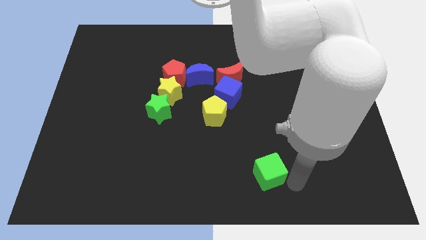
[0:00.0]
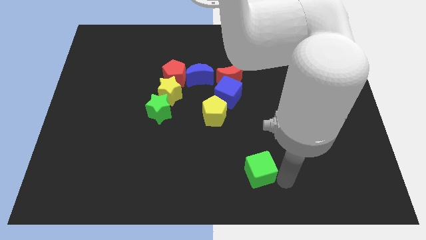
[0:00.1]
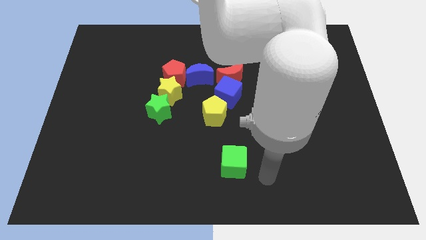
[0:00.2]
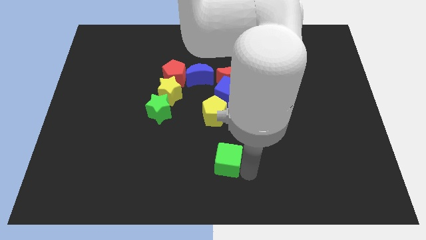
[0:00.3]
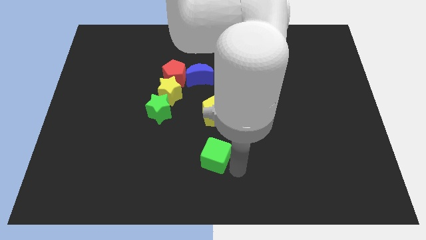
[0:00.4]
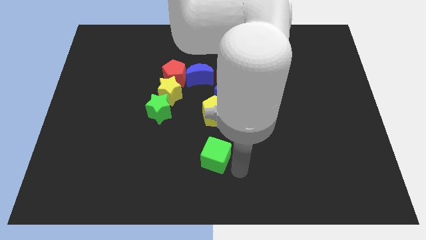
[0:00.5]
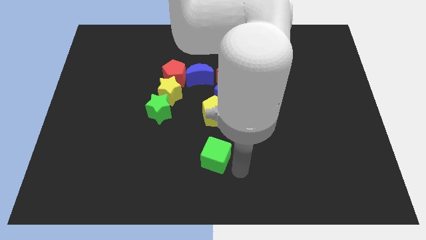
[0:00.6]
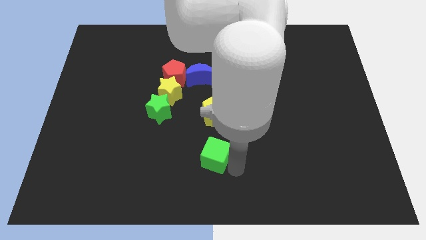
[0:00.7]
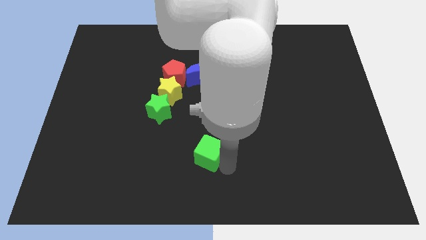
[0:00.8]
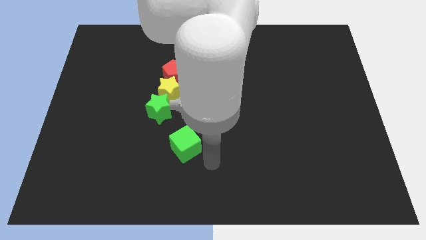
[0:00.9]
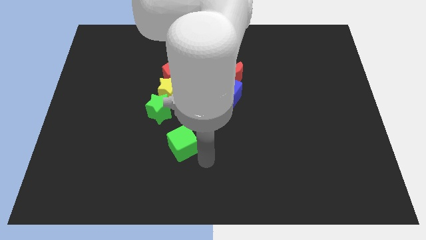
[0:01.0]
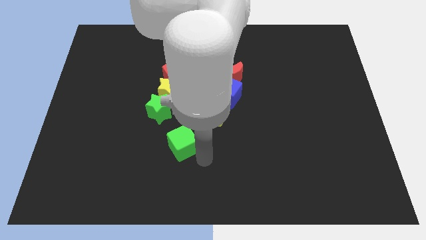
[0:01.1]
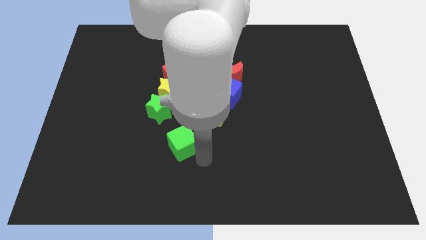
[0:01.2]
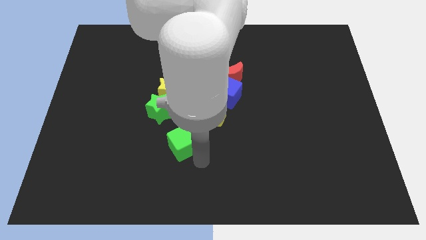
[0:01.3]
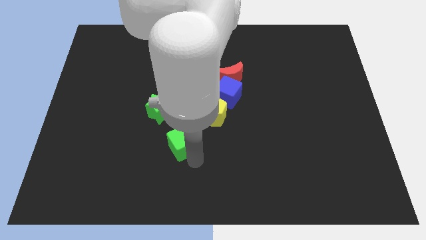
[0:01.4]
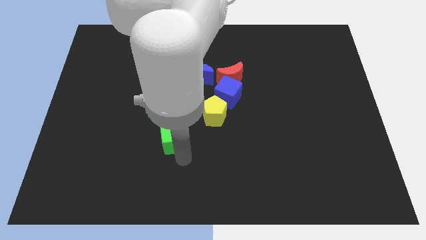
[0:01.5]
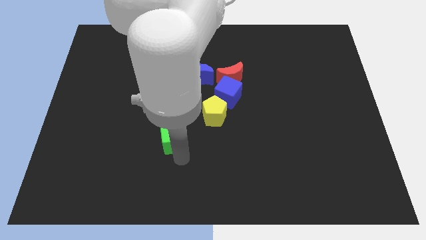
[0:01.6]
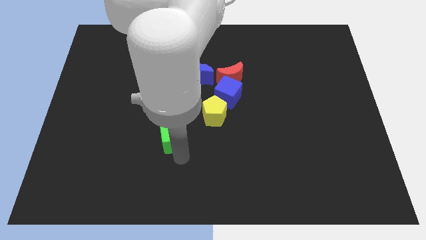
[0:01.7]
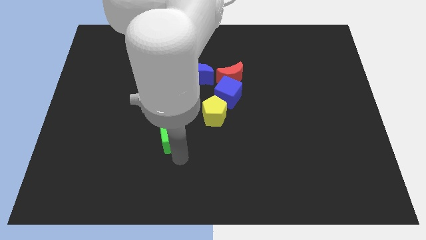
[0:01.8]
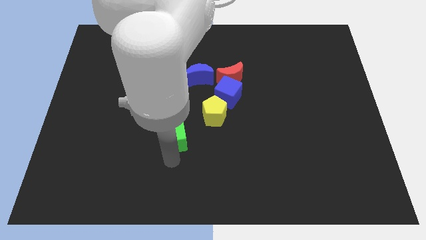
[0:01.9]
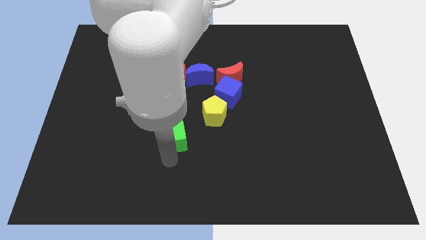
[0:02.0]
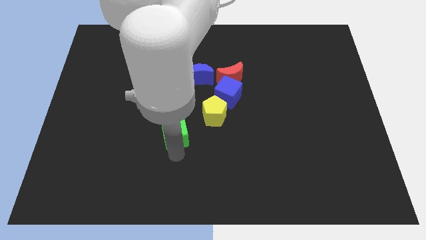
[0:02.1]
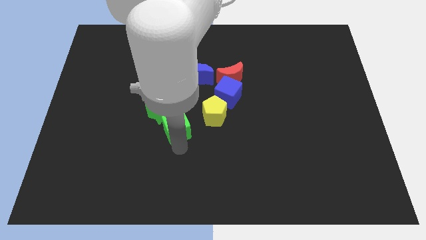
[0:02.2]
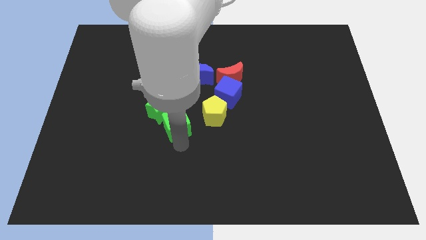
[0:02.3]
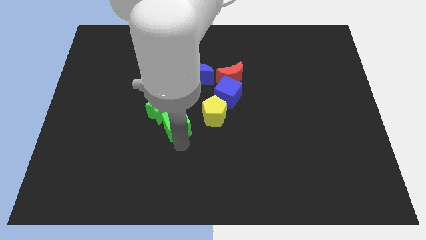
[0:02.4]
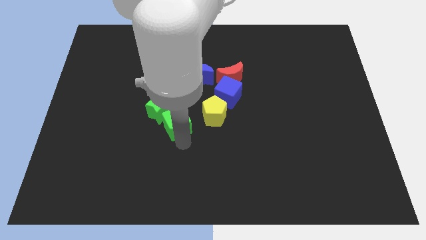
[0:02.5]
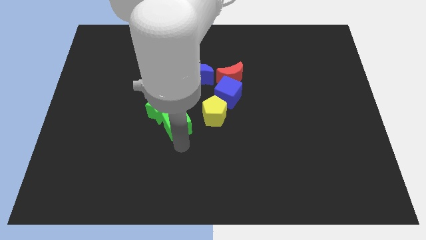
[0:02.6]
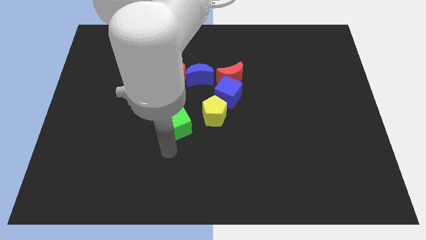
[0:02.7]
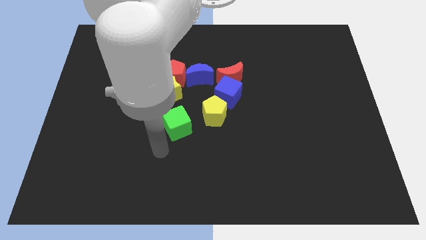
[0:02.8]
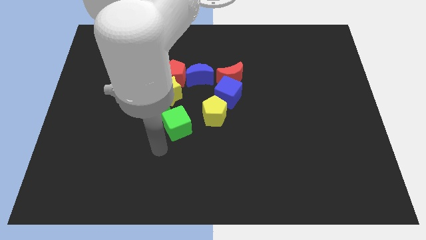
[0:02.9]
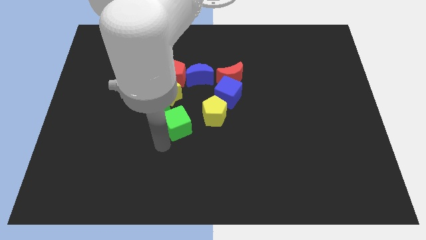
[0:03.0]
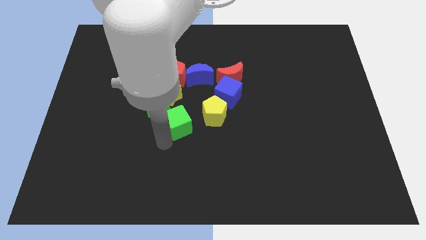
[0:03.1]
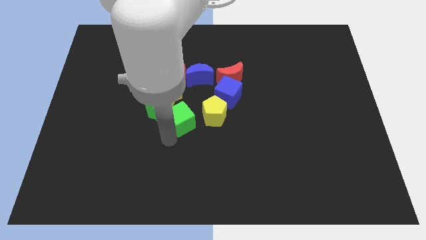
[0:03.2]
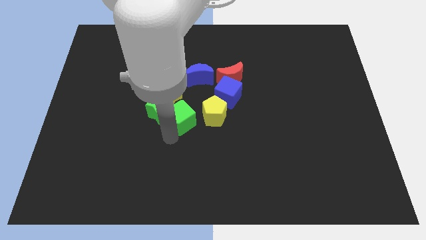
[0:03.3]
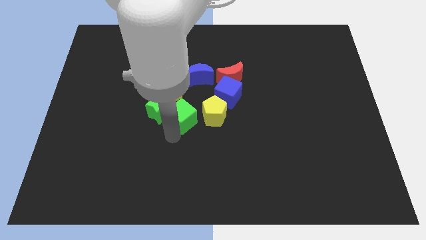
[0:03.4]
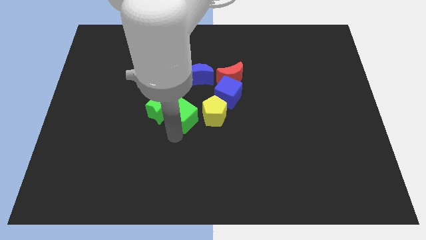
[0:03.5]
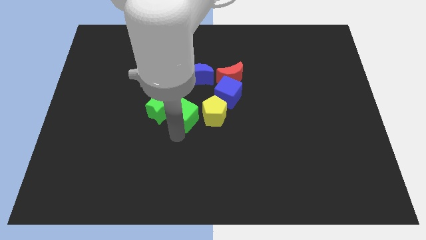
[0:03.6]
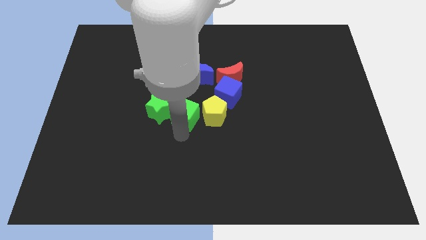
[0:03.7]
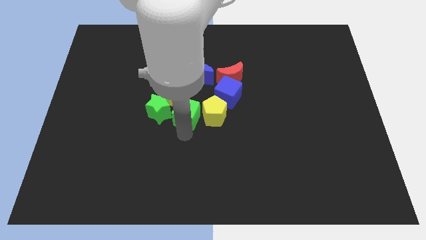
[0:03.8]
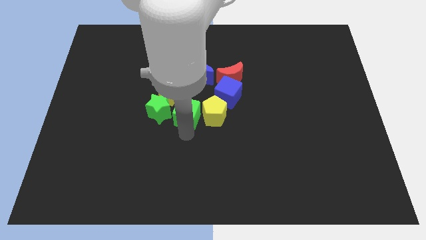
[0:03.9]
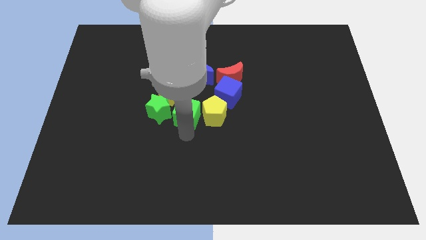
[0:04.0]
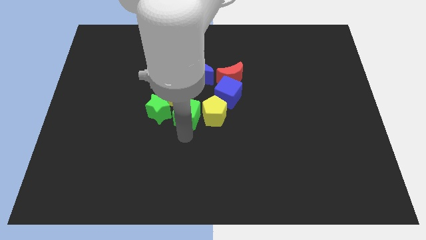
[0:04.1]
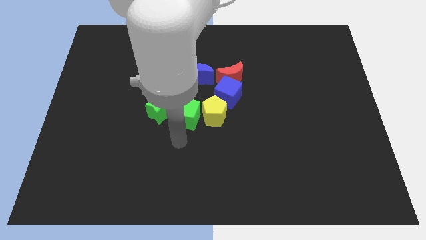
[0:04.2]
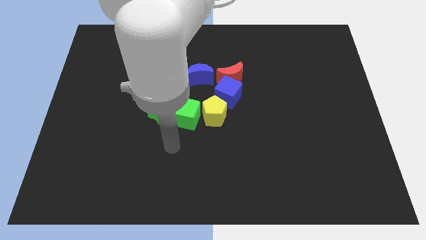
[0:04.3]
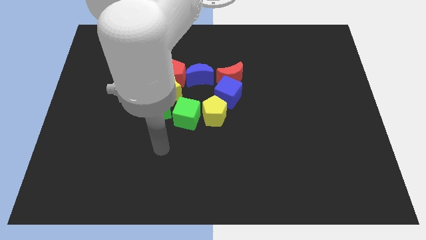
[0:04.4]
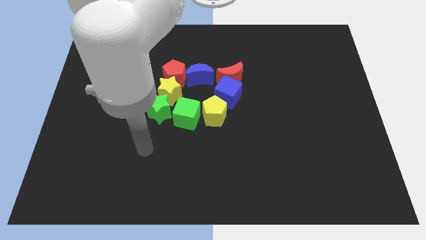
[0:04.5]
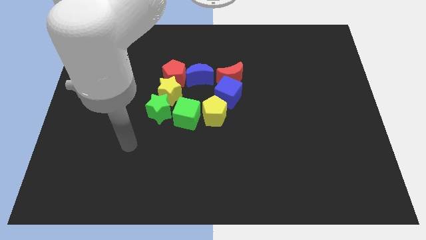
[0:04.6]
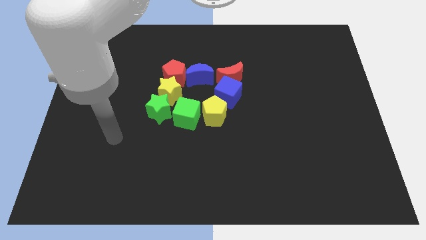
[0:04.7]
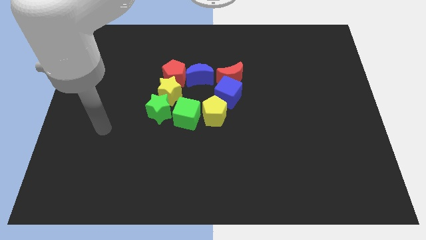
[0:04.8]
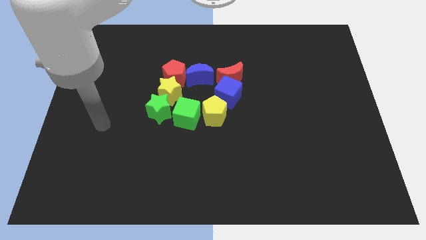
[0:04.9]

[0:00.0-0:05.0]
place the green cube in between the yellow pentagon and the green star

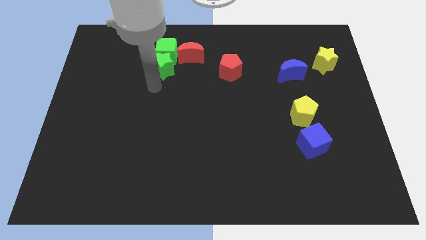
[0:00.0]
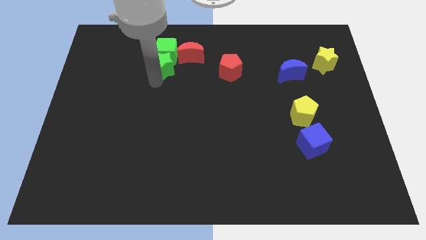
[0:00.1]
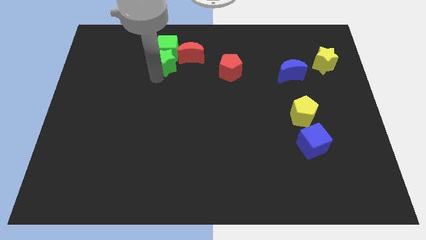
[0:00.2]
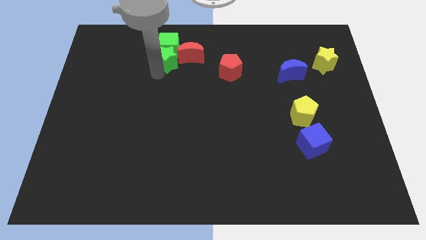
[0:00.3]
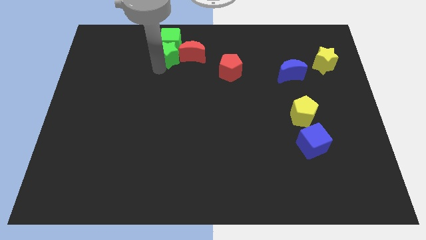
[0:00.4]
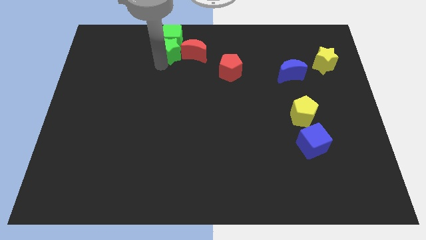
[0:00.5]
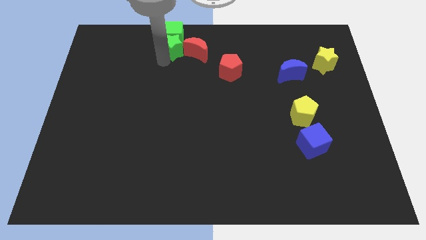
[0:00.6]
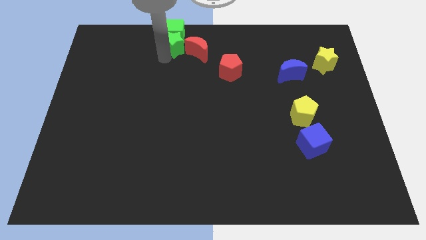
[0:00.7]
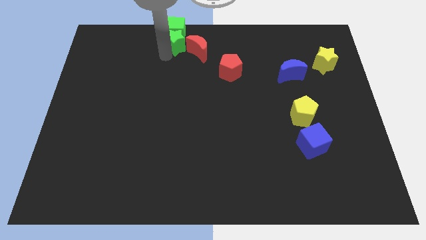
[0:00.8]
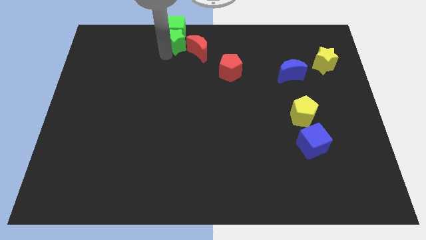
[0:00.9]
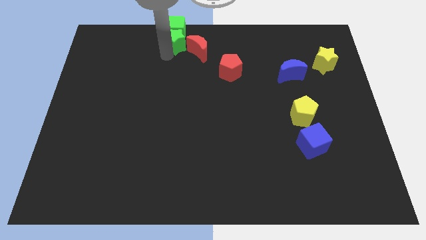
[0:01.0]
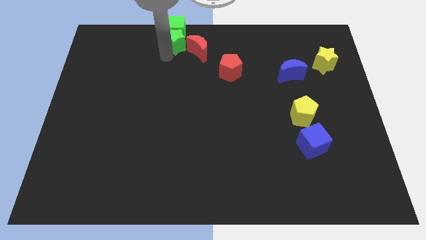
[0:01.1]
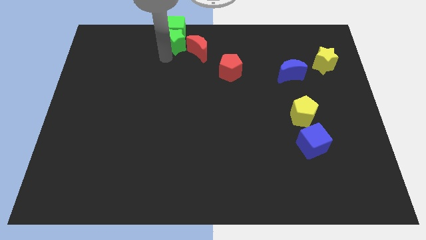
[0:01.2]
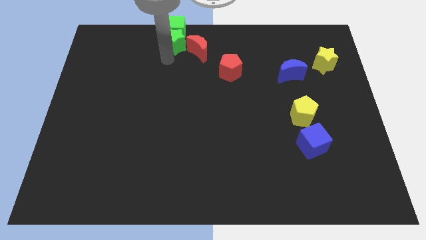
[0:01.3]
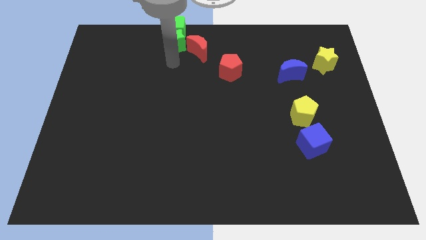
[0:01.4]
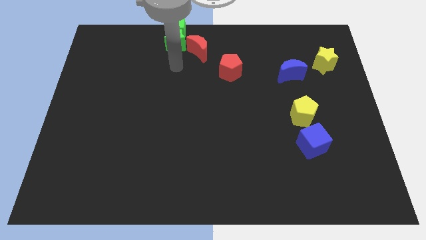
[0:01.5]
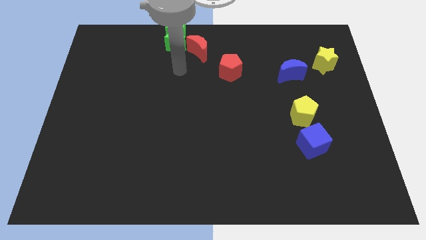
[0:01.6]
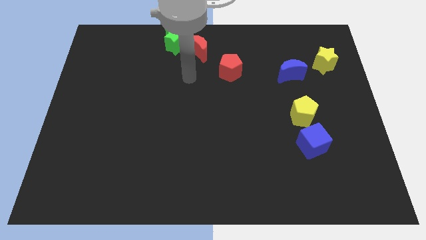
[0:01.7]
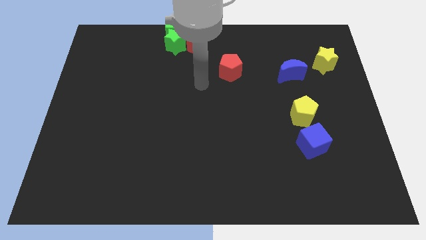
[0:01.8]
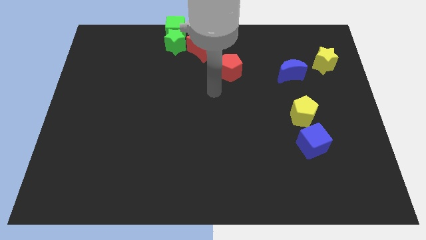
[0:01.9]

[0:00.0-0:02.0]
slide the green blocks to the top

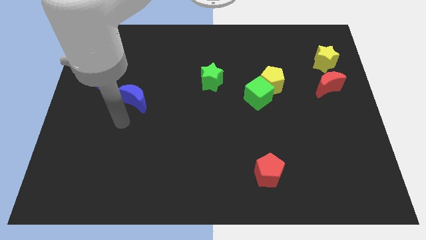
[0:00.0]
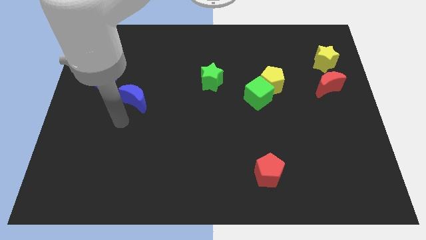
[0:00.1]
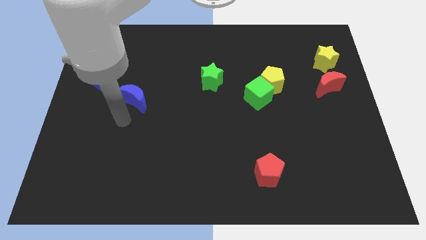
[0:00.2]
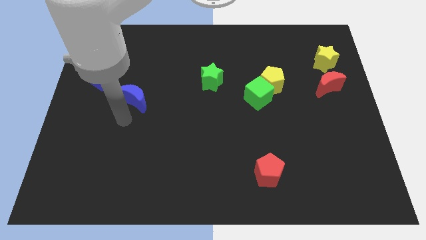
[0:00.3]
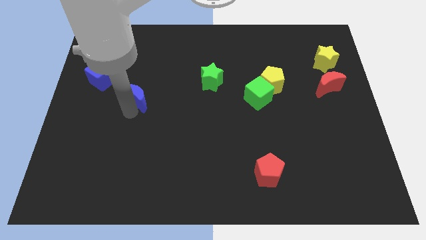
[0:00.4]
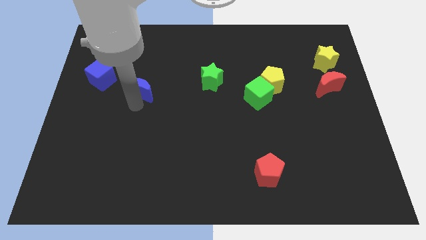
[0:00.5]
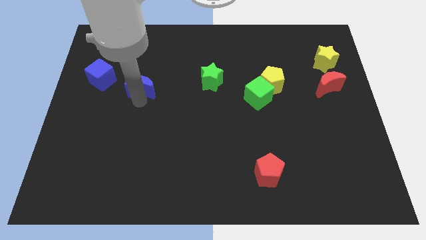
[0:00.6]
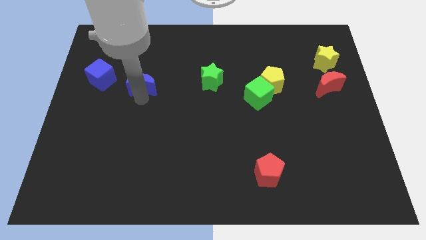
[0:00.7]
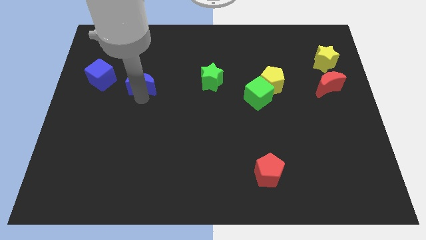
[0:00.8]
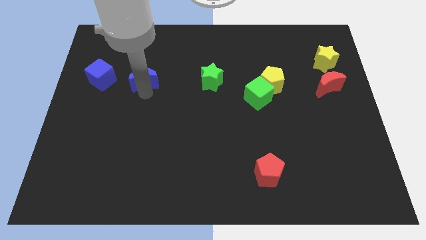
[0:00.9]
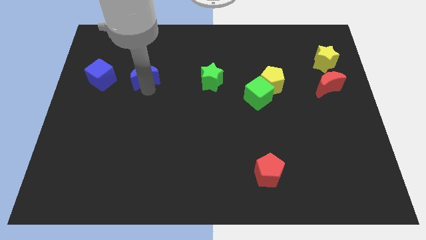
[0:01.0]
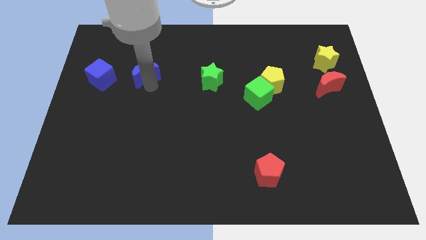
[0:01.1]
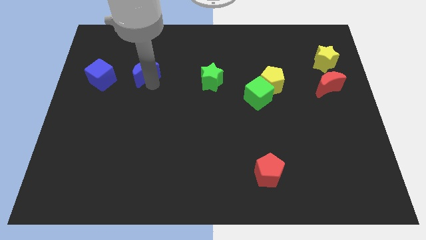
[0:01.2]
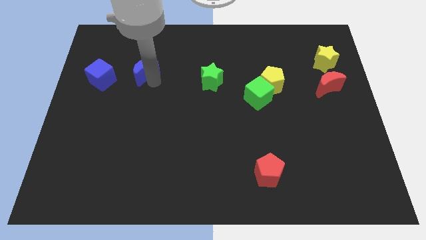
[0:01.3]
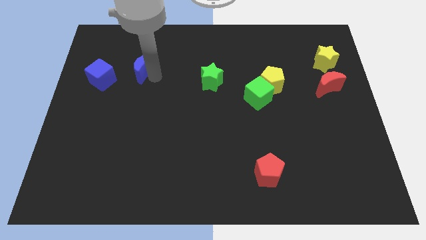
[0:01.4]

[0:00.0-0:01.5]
place the blue crescent in between the green star and blue cube

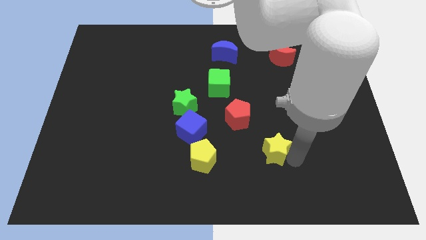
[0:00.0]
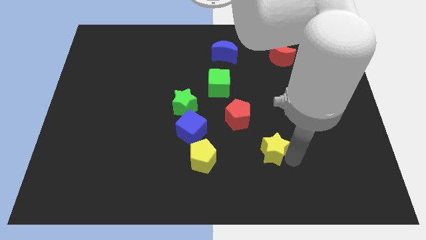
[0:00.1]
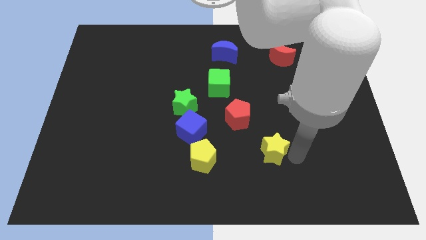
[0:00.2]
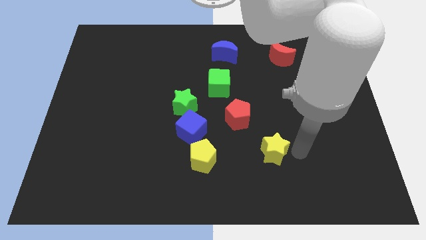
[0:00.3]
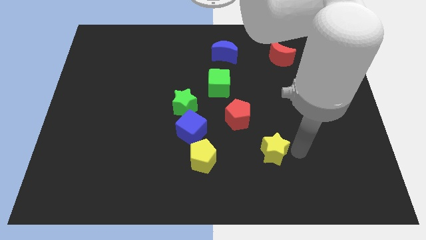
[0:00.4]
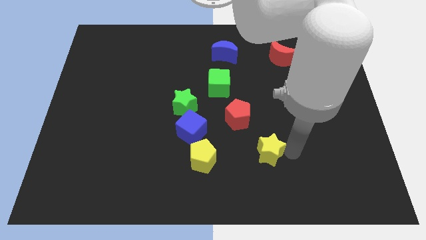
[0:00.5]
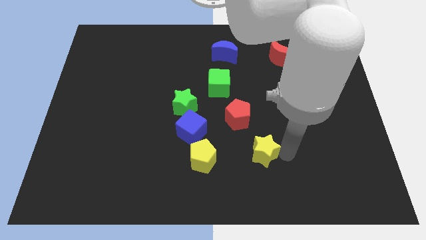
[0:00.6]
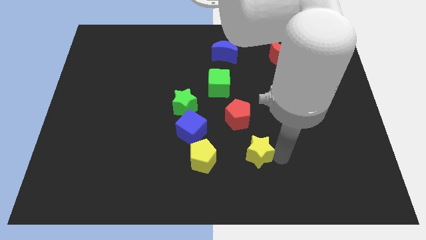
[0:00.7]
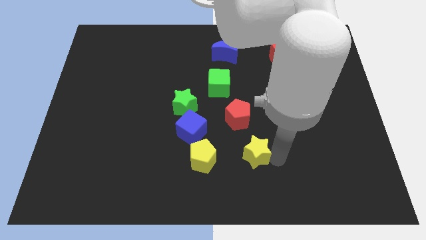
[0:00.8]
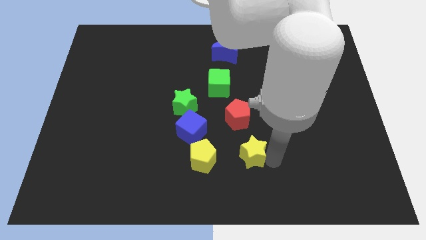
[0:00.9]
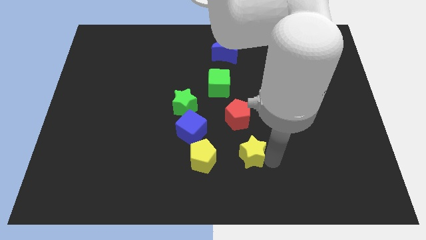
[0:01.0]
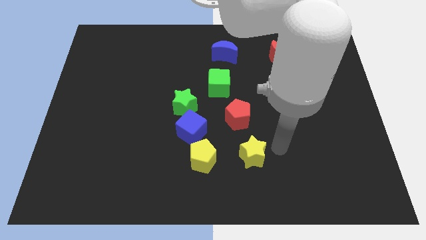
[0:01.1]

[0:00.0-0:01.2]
place the yellow star below the red pentagon
